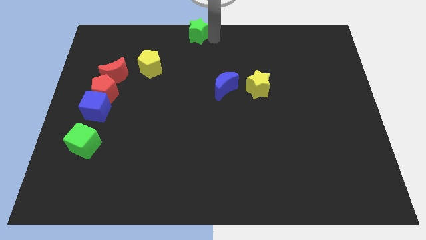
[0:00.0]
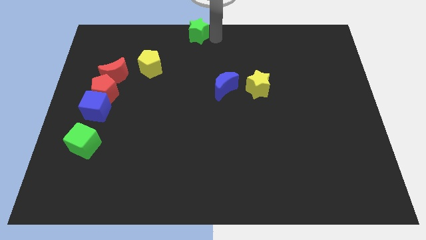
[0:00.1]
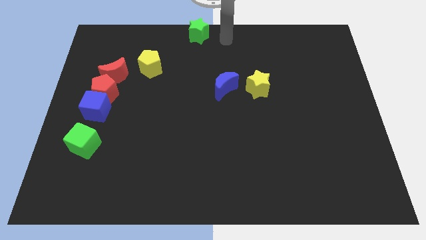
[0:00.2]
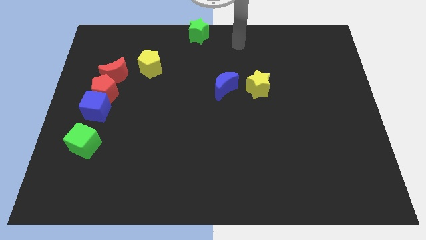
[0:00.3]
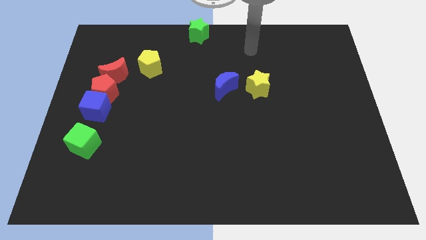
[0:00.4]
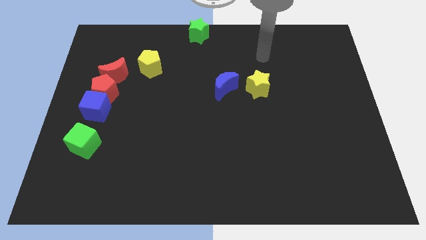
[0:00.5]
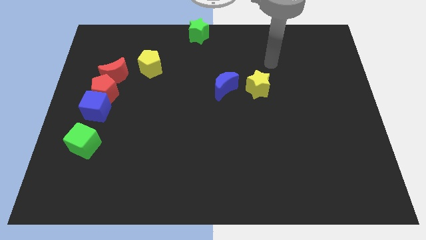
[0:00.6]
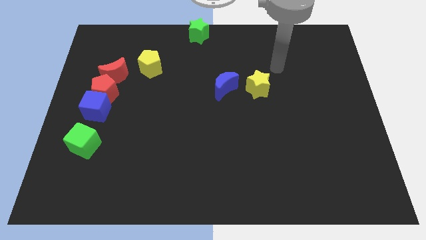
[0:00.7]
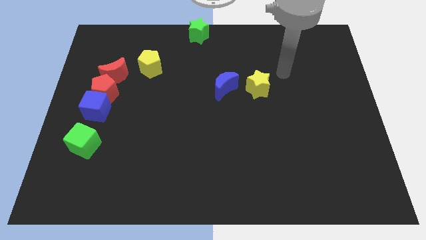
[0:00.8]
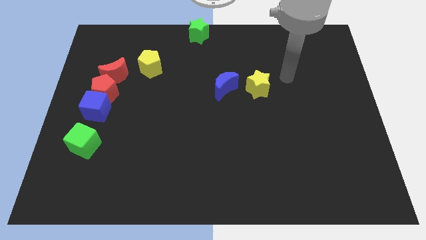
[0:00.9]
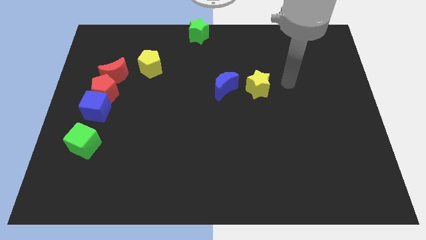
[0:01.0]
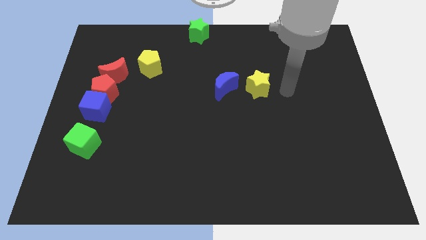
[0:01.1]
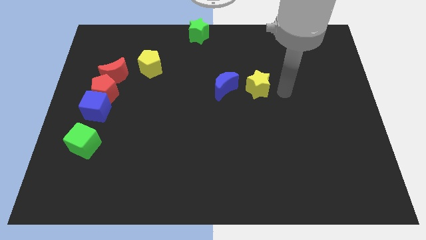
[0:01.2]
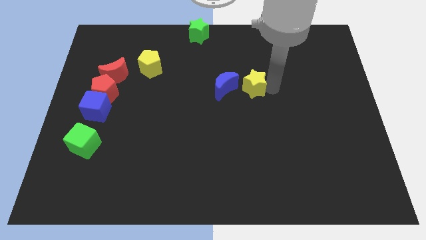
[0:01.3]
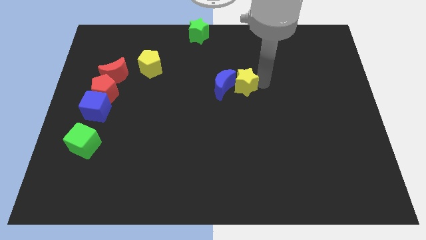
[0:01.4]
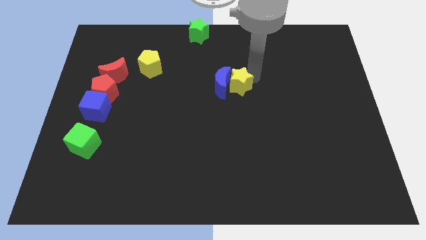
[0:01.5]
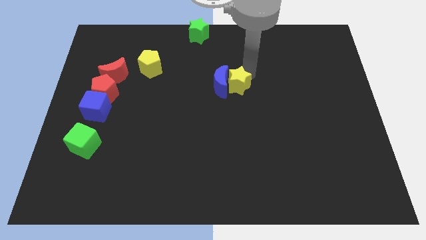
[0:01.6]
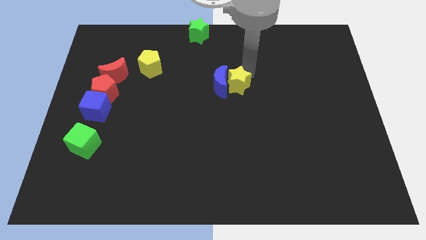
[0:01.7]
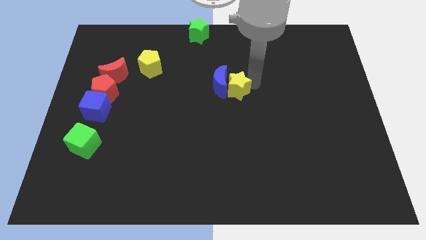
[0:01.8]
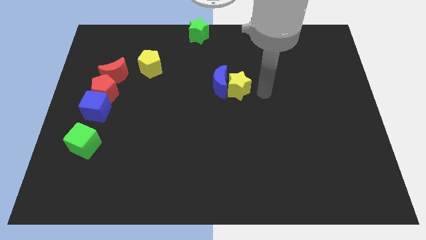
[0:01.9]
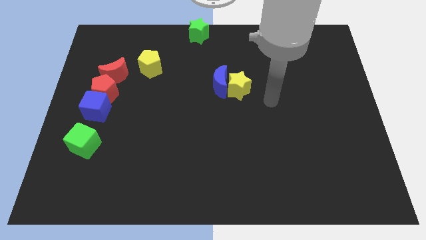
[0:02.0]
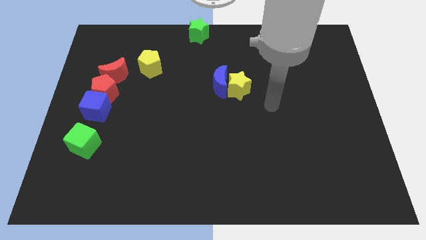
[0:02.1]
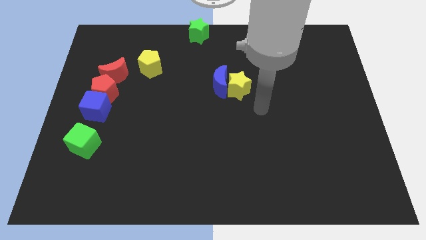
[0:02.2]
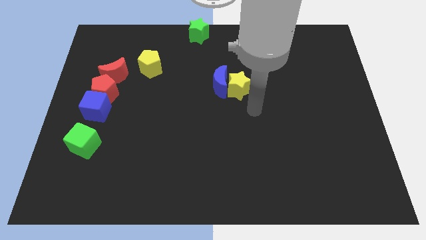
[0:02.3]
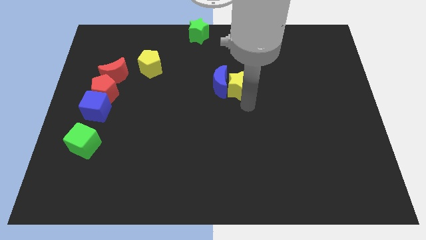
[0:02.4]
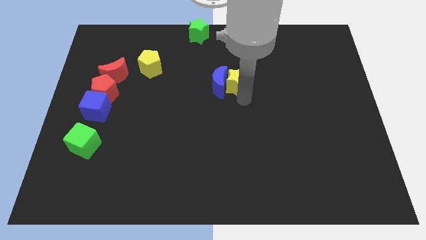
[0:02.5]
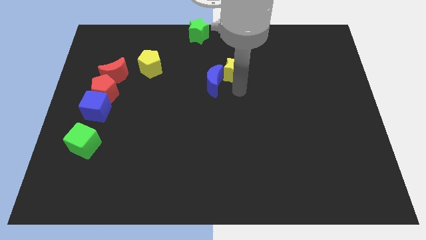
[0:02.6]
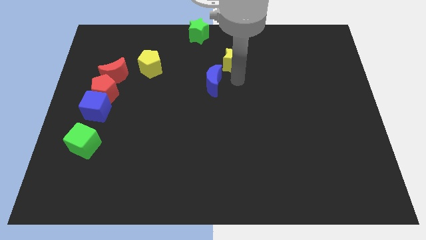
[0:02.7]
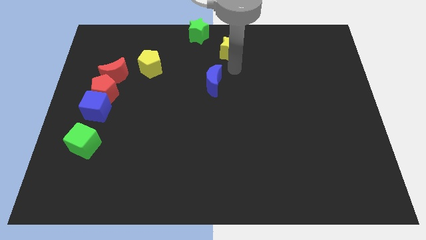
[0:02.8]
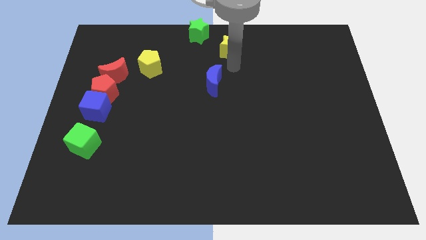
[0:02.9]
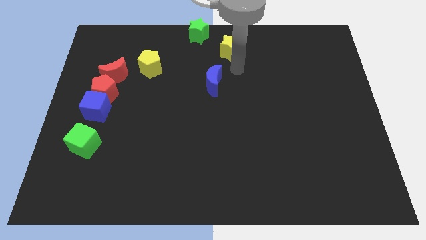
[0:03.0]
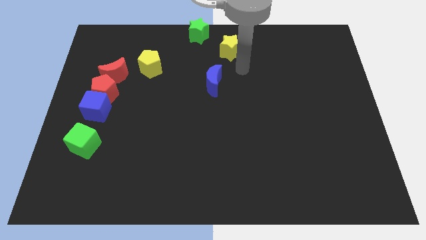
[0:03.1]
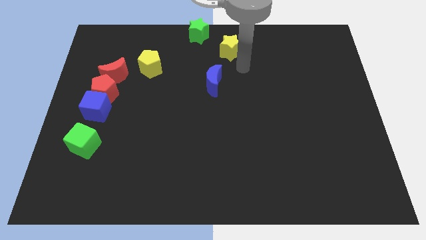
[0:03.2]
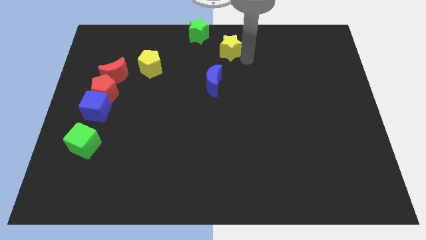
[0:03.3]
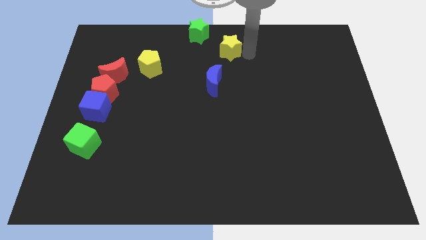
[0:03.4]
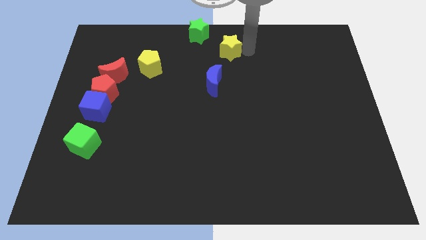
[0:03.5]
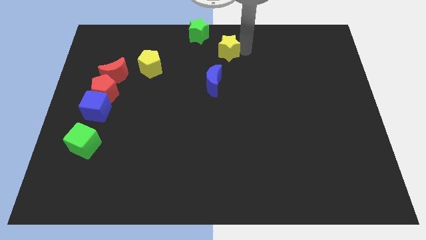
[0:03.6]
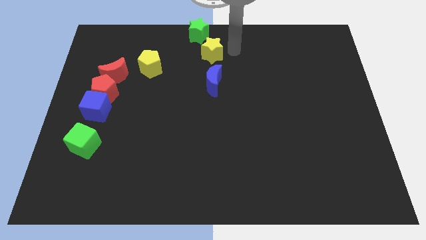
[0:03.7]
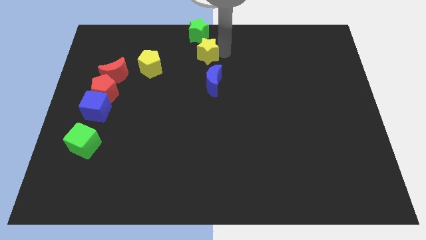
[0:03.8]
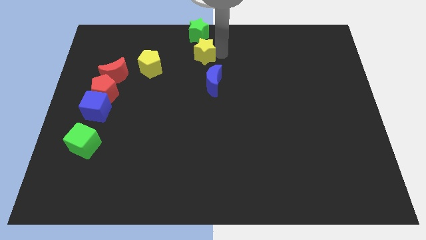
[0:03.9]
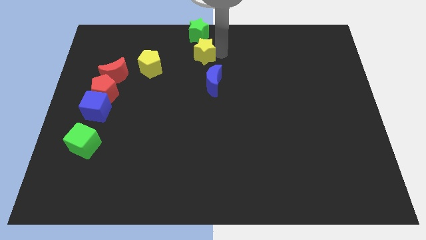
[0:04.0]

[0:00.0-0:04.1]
put the yellow star in between the green star and blue moon

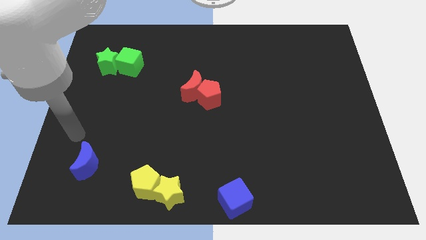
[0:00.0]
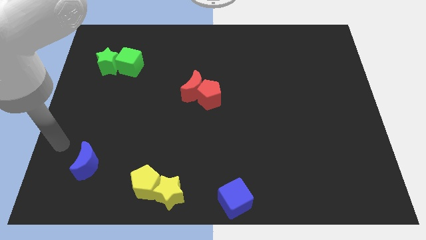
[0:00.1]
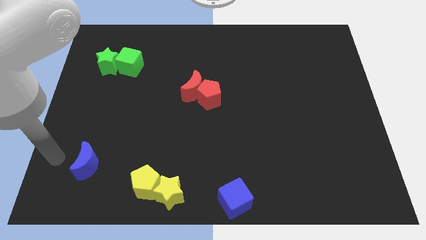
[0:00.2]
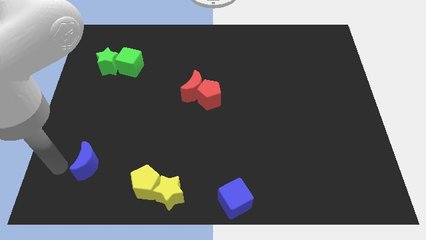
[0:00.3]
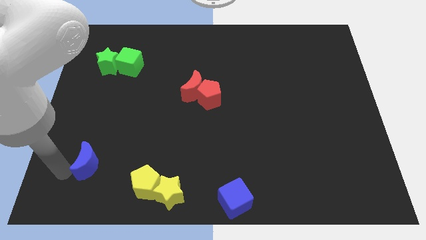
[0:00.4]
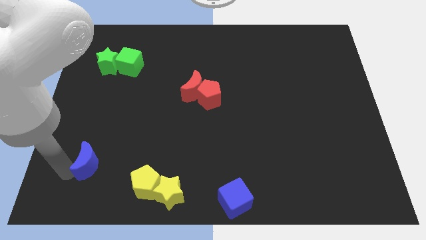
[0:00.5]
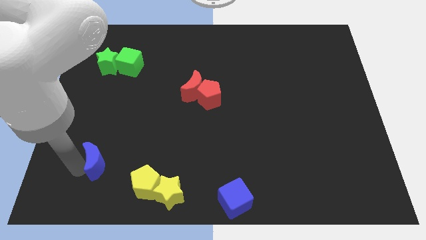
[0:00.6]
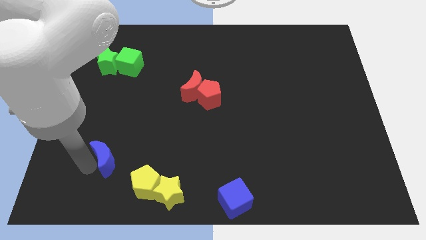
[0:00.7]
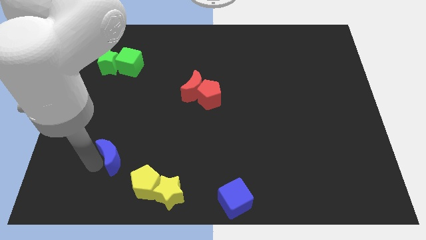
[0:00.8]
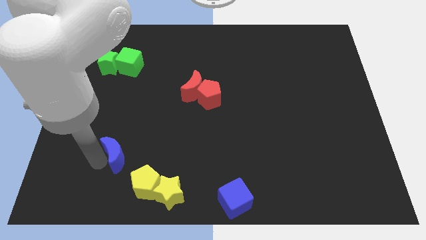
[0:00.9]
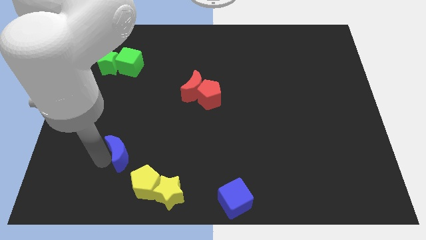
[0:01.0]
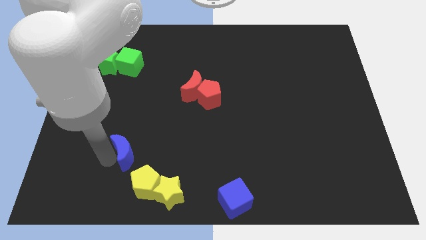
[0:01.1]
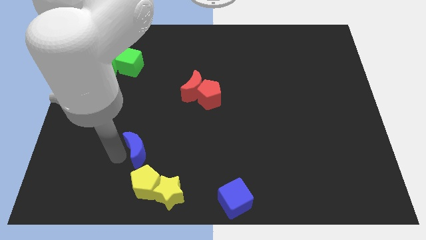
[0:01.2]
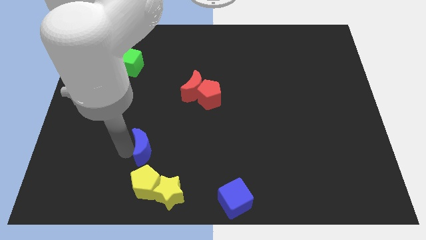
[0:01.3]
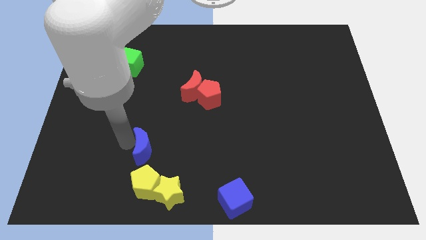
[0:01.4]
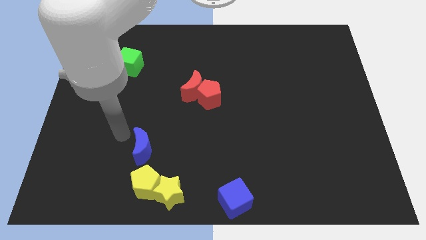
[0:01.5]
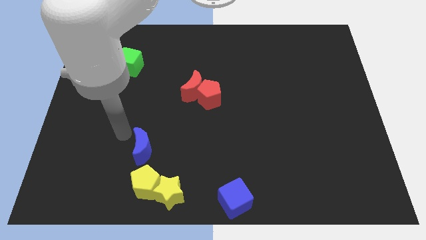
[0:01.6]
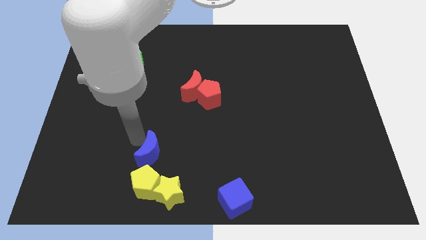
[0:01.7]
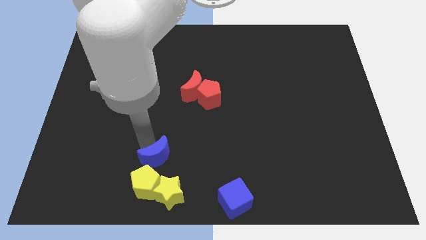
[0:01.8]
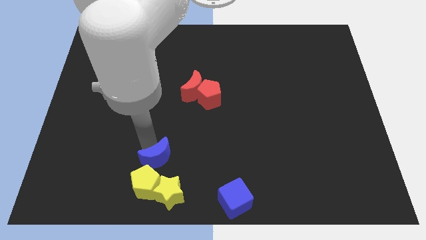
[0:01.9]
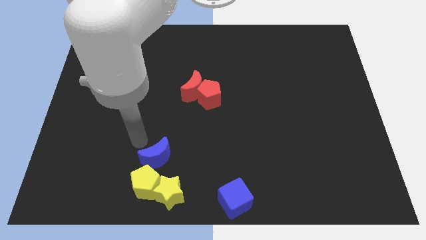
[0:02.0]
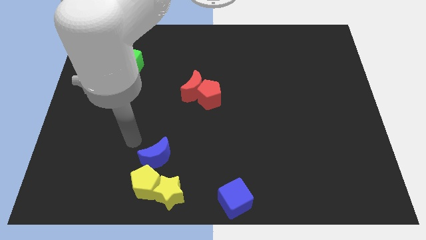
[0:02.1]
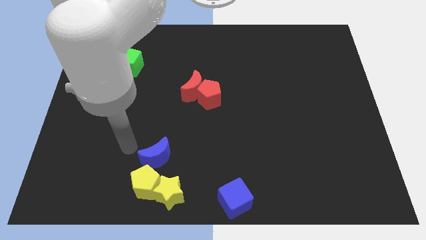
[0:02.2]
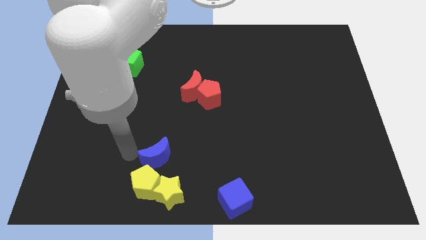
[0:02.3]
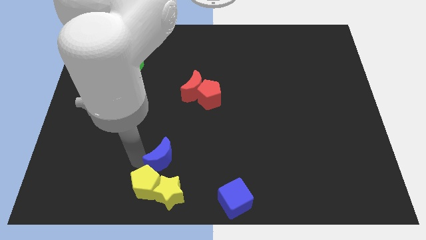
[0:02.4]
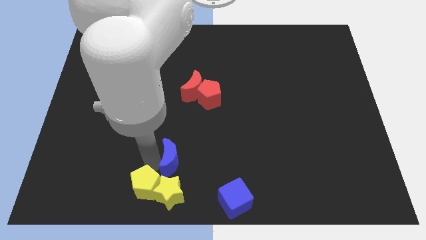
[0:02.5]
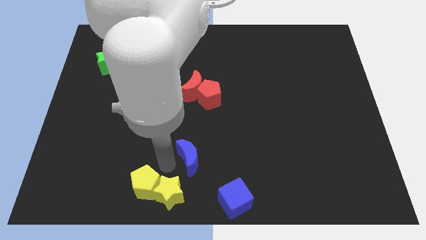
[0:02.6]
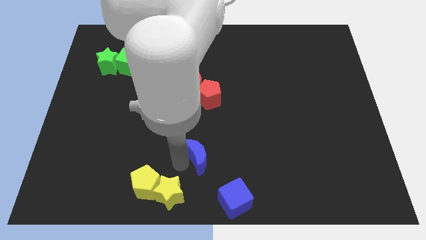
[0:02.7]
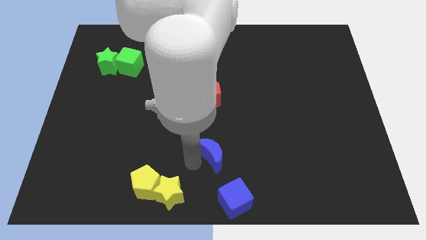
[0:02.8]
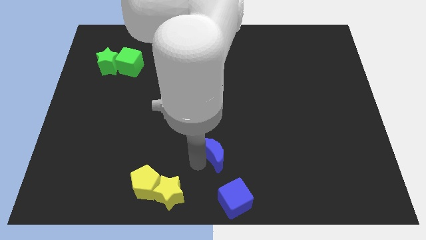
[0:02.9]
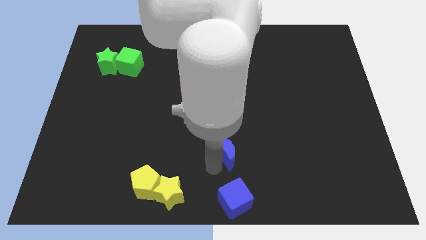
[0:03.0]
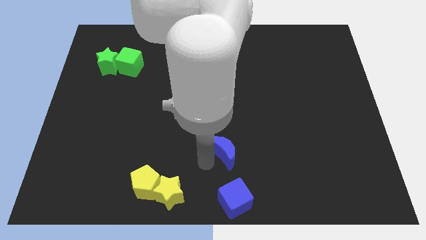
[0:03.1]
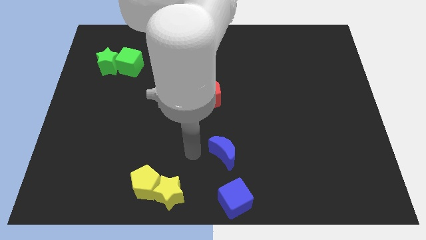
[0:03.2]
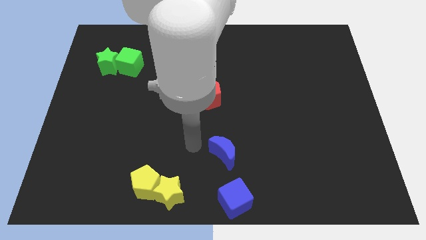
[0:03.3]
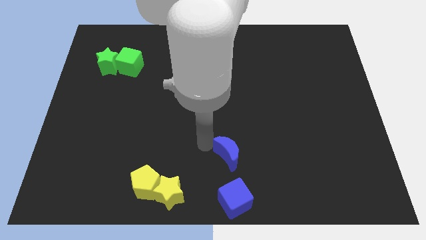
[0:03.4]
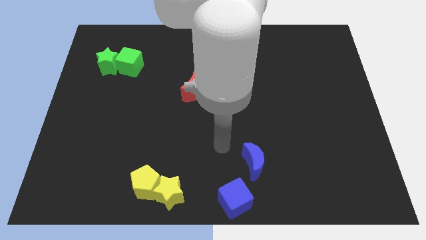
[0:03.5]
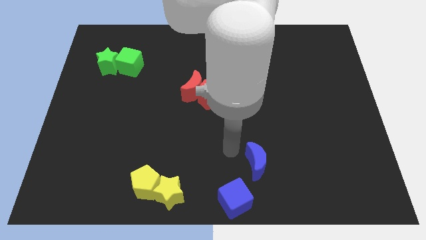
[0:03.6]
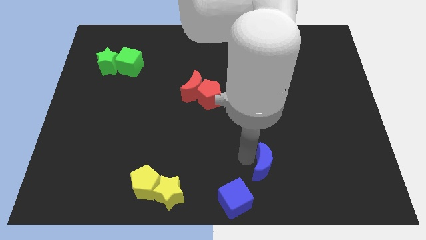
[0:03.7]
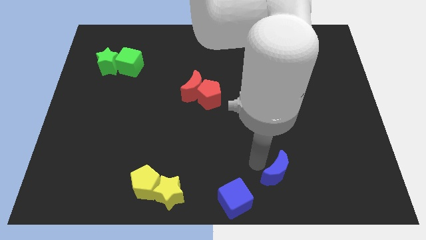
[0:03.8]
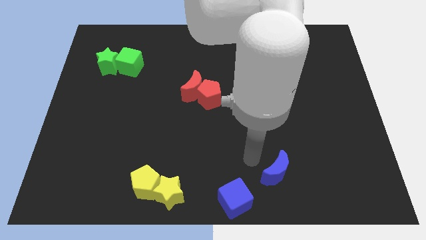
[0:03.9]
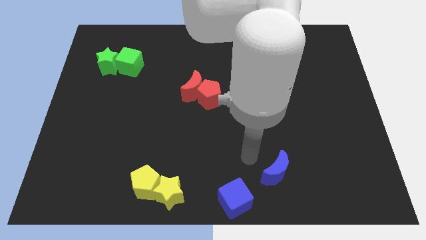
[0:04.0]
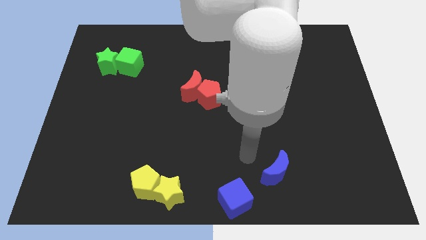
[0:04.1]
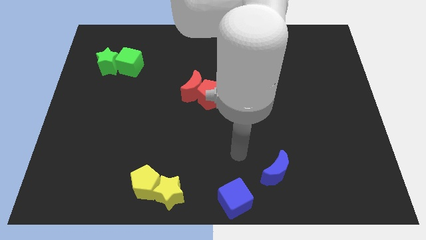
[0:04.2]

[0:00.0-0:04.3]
push the blue crescent towards the bottom right of the board

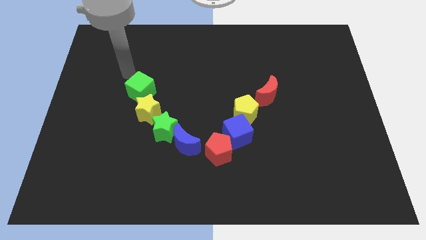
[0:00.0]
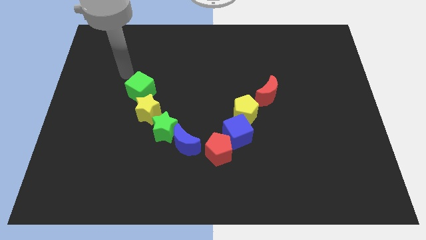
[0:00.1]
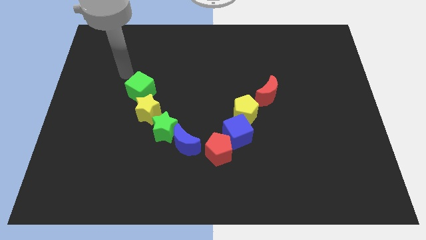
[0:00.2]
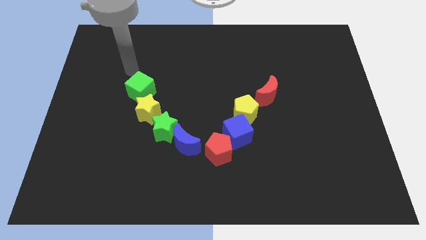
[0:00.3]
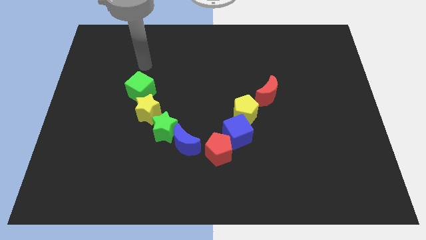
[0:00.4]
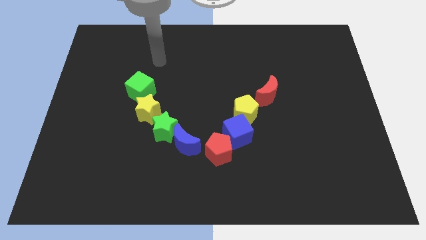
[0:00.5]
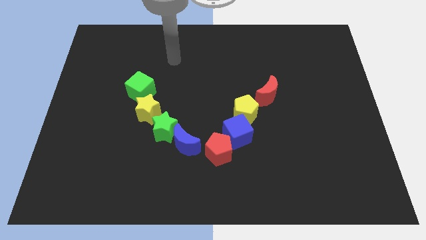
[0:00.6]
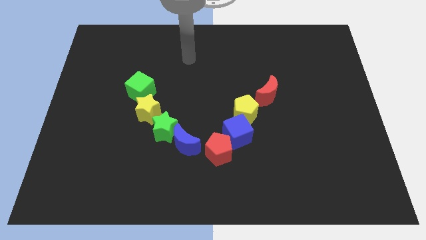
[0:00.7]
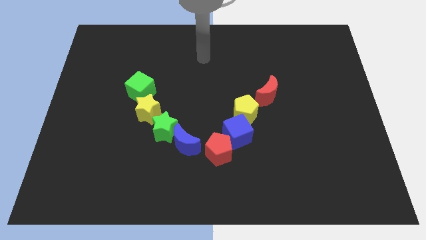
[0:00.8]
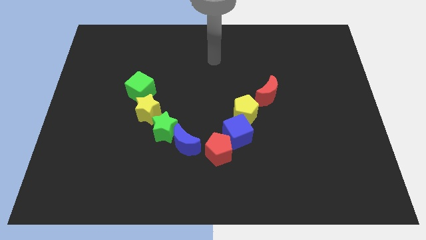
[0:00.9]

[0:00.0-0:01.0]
move your arm away from the green cube
